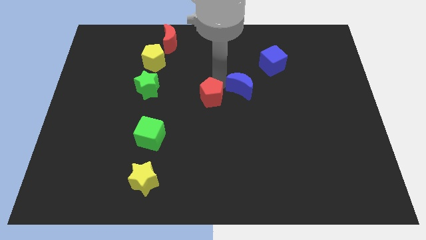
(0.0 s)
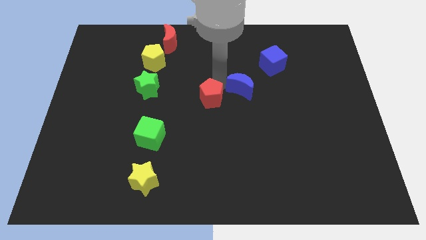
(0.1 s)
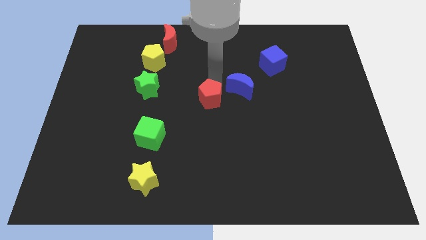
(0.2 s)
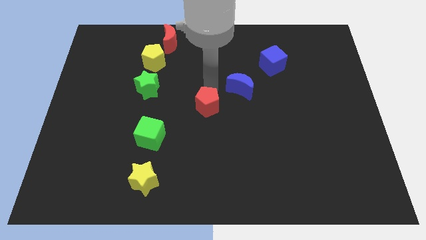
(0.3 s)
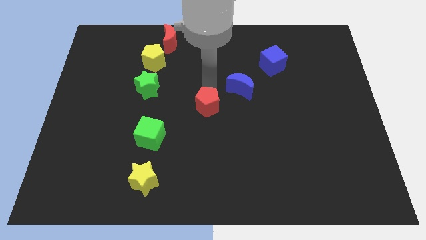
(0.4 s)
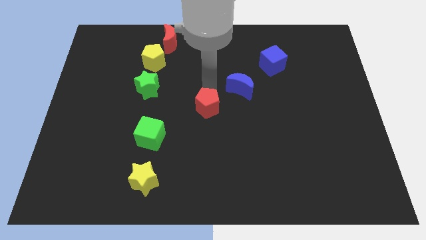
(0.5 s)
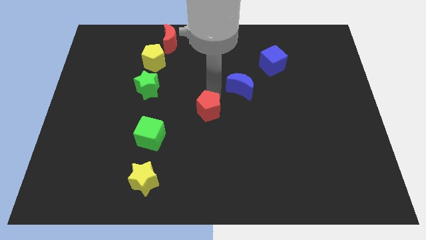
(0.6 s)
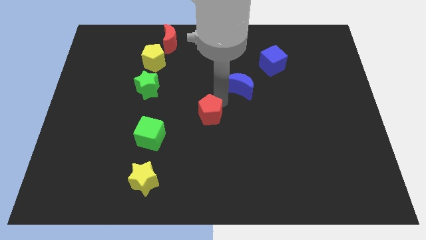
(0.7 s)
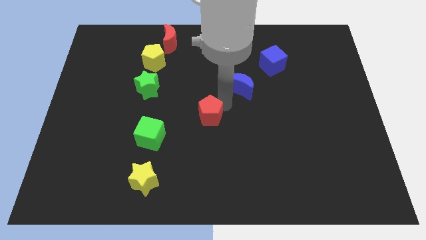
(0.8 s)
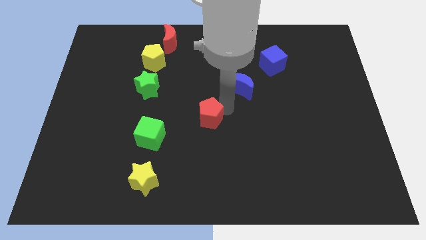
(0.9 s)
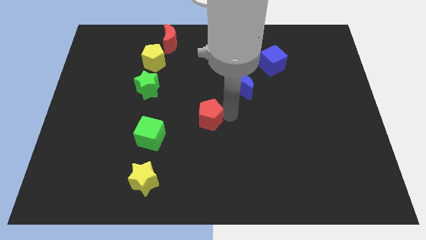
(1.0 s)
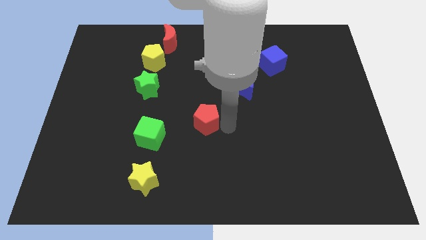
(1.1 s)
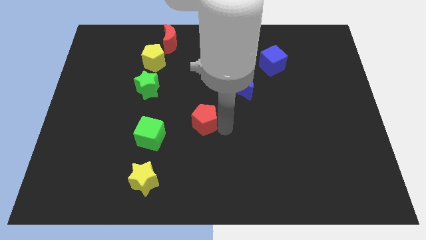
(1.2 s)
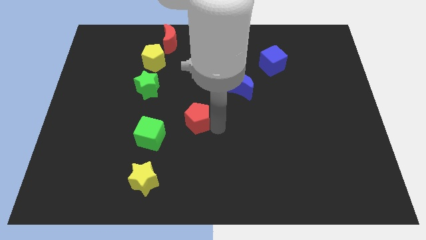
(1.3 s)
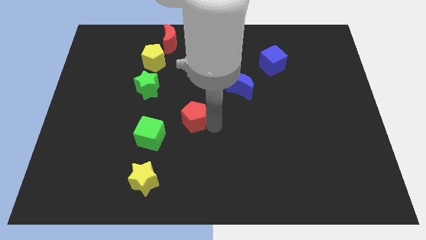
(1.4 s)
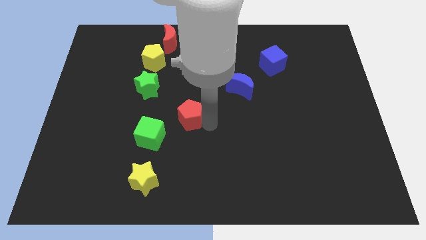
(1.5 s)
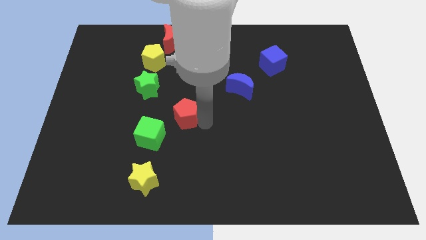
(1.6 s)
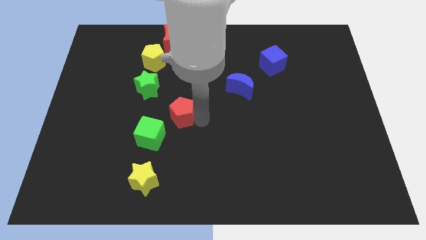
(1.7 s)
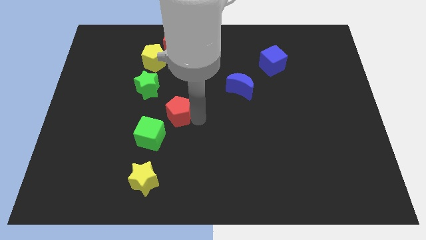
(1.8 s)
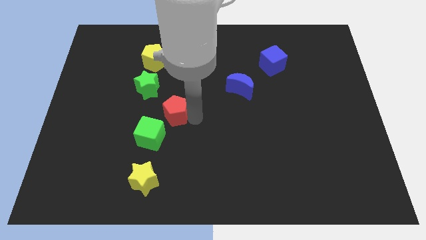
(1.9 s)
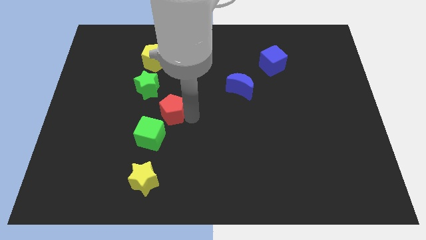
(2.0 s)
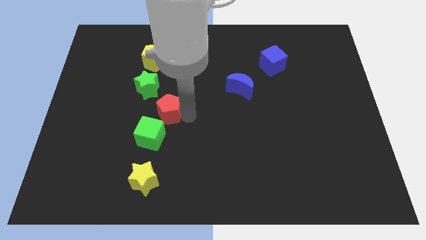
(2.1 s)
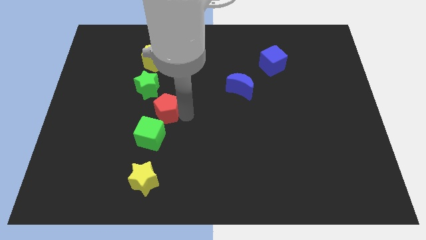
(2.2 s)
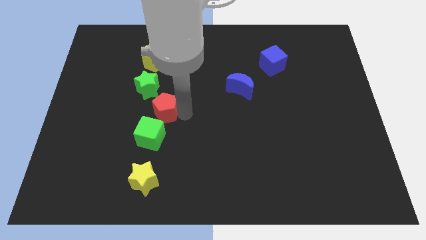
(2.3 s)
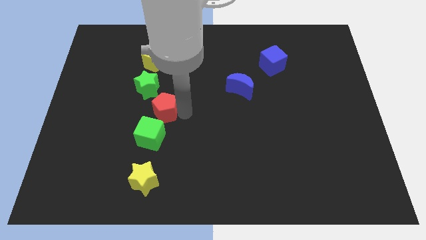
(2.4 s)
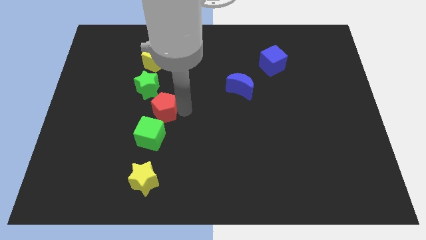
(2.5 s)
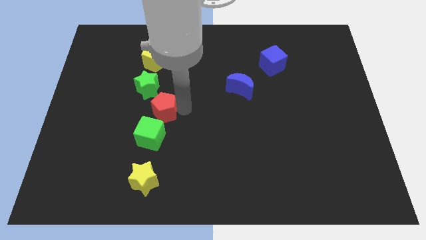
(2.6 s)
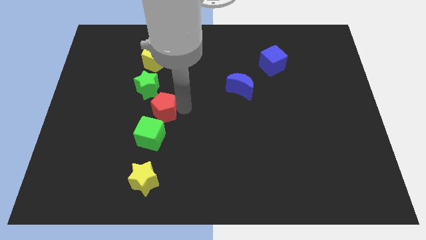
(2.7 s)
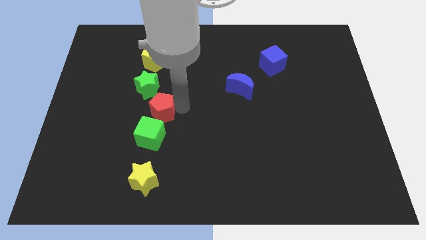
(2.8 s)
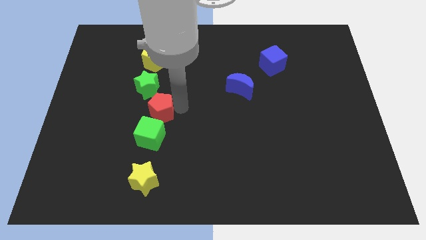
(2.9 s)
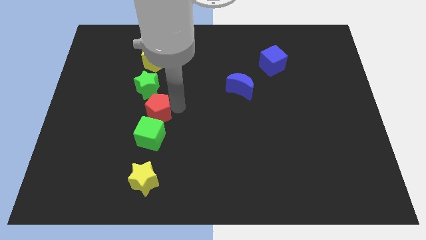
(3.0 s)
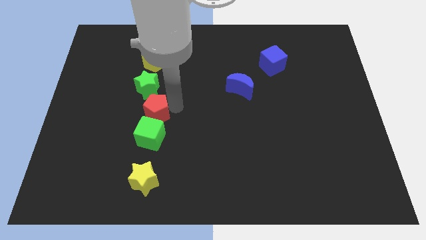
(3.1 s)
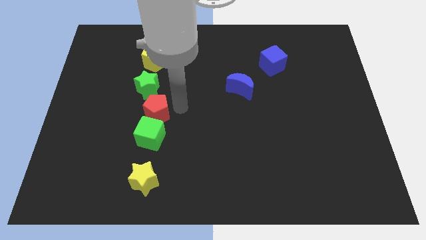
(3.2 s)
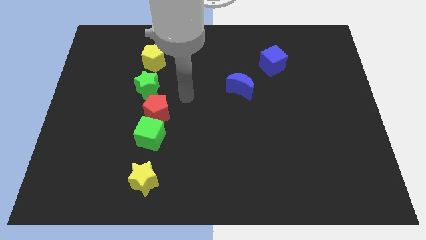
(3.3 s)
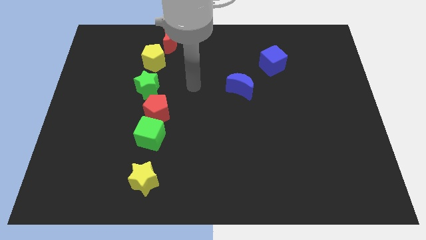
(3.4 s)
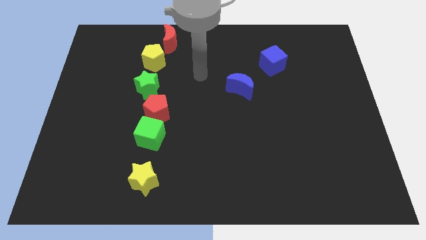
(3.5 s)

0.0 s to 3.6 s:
move the red pentagon to the top of the green cube

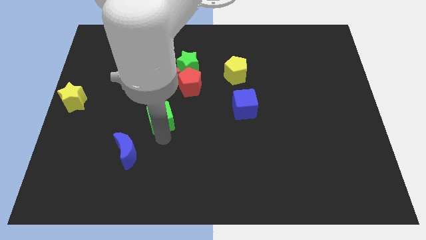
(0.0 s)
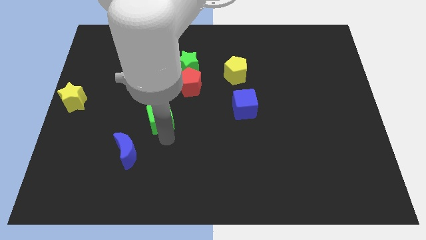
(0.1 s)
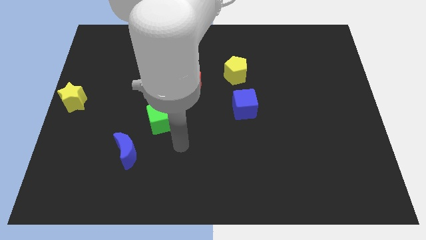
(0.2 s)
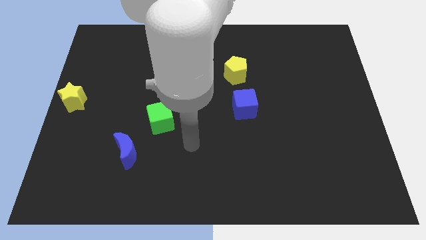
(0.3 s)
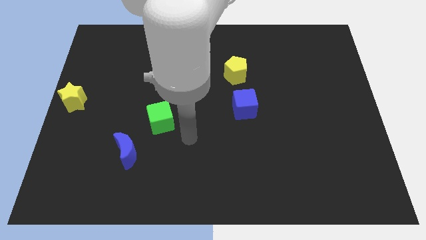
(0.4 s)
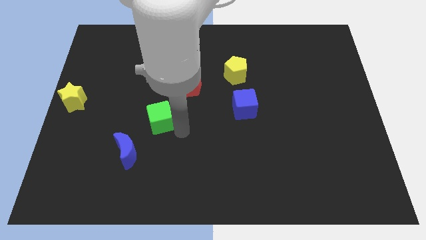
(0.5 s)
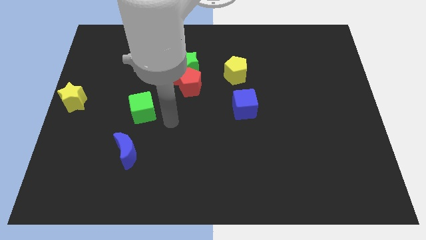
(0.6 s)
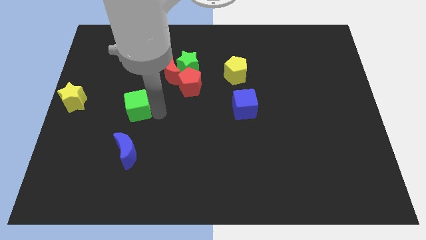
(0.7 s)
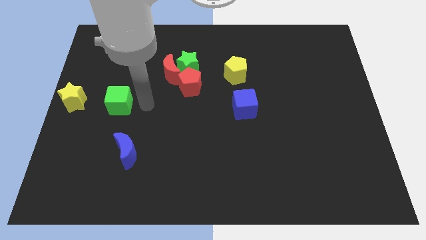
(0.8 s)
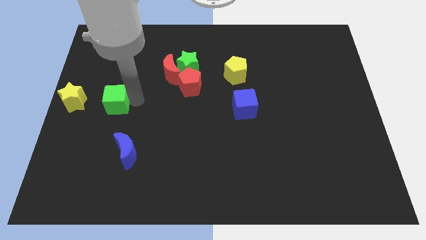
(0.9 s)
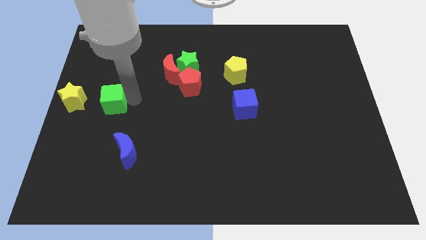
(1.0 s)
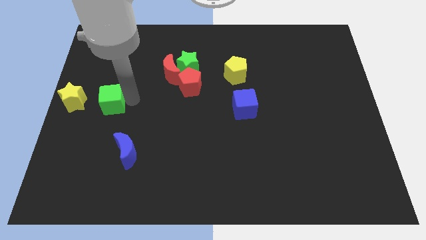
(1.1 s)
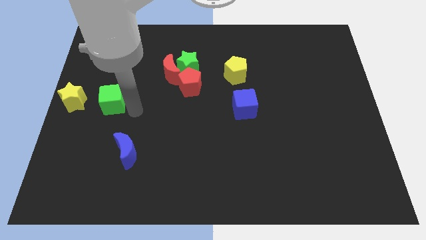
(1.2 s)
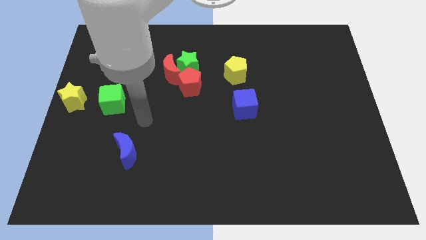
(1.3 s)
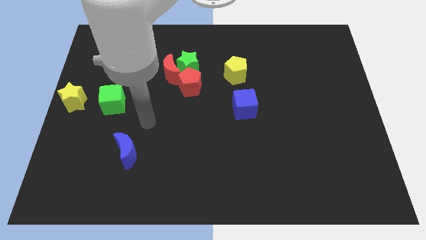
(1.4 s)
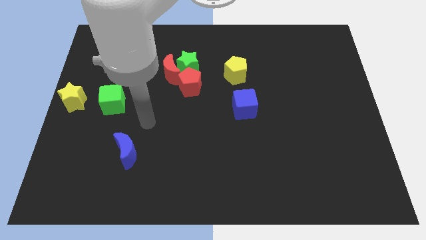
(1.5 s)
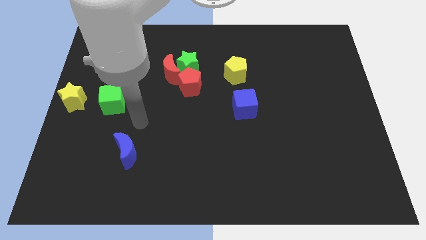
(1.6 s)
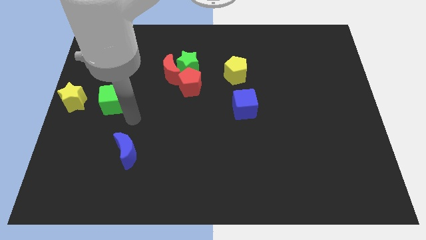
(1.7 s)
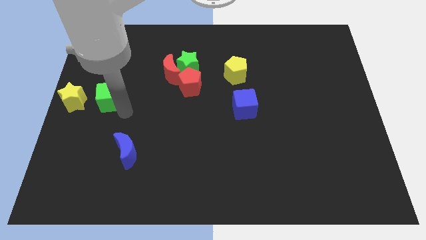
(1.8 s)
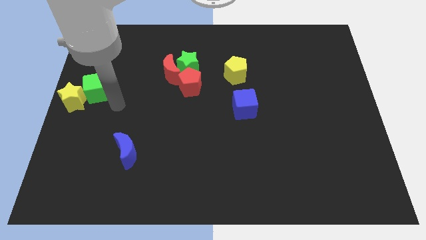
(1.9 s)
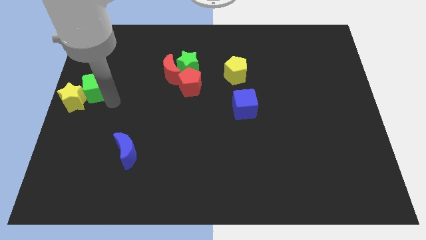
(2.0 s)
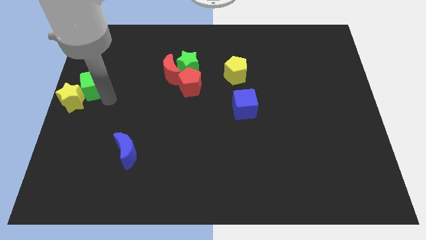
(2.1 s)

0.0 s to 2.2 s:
move the green cube to the right to yellow star

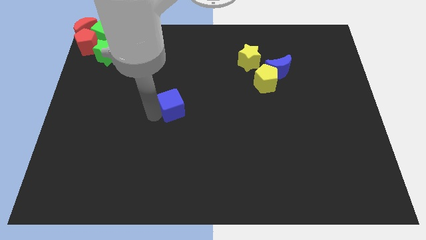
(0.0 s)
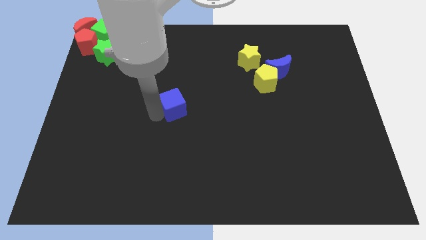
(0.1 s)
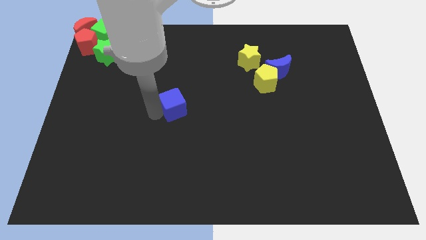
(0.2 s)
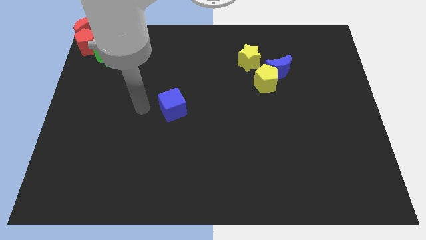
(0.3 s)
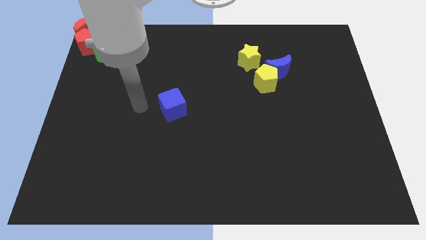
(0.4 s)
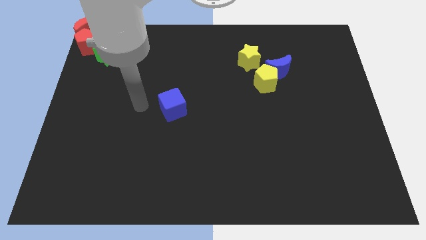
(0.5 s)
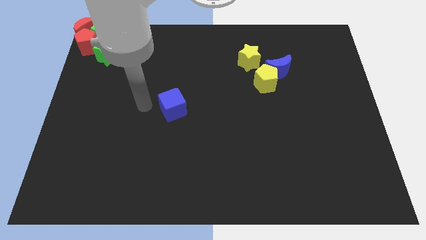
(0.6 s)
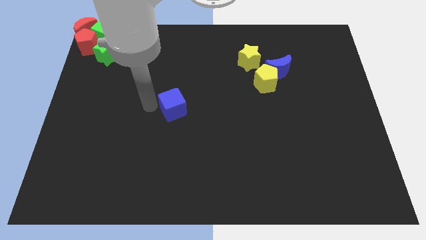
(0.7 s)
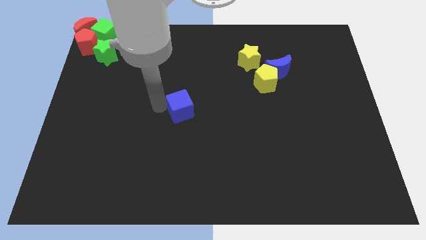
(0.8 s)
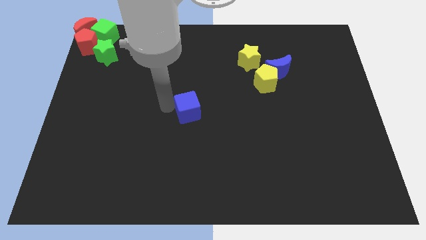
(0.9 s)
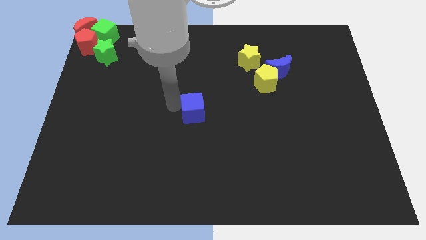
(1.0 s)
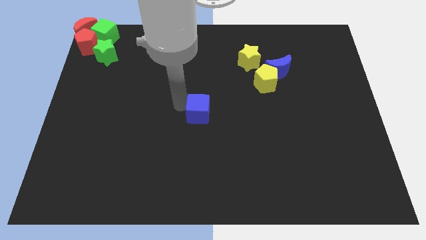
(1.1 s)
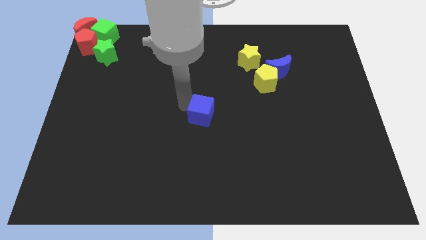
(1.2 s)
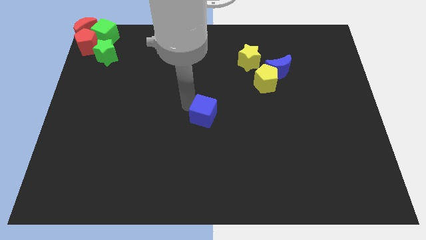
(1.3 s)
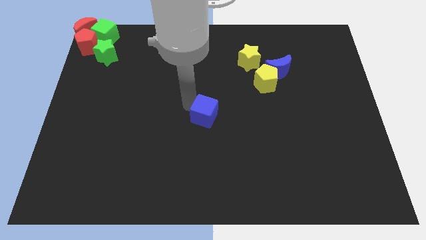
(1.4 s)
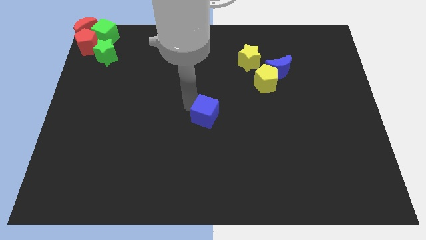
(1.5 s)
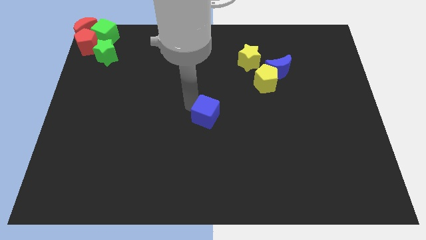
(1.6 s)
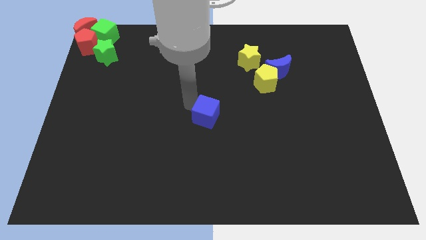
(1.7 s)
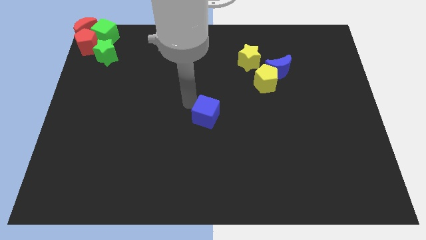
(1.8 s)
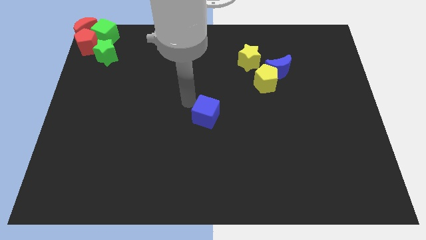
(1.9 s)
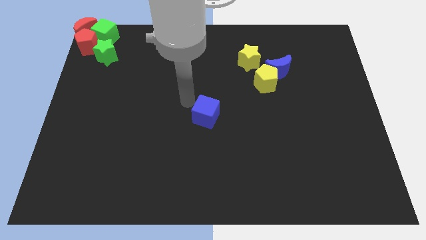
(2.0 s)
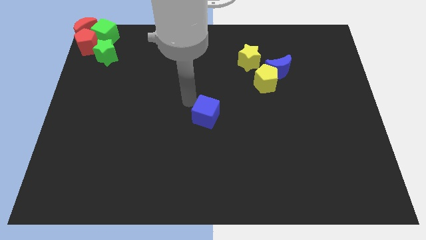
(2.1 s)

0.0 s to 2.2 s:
place the blue cube to the center of the board

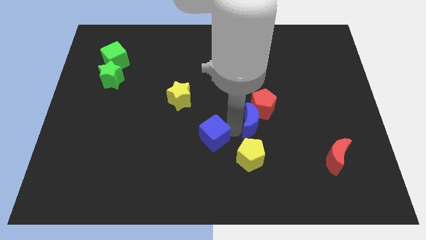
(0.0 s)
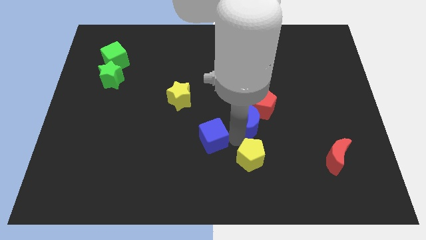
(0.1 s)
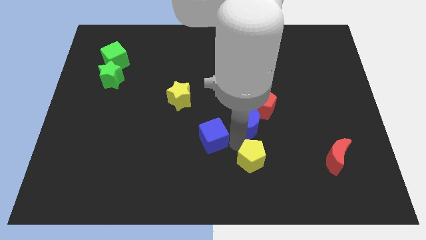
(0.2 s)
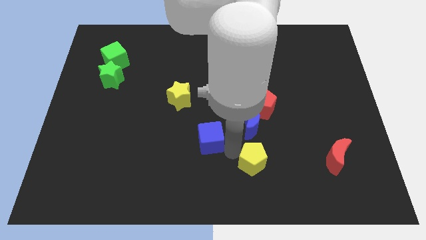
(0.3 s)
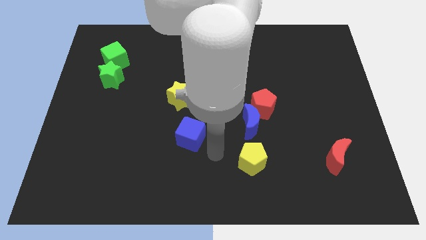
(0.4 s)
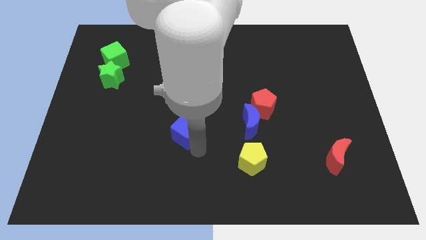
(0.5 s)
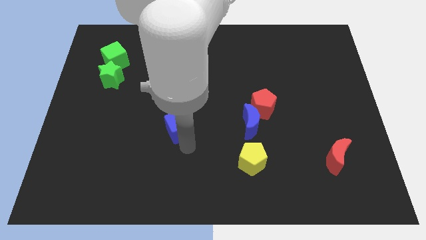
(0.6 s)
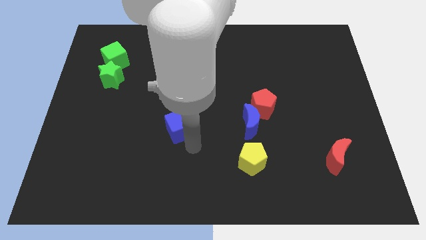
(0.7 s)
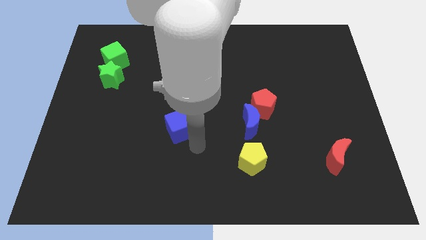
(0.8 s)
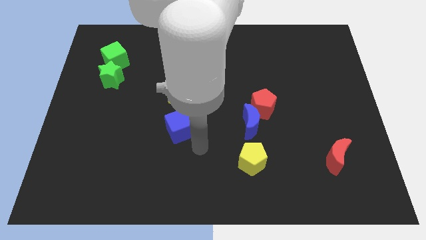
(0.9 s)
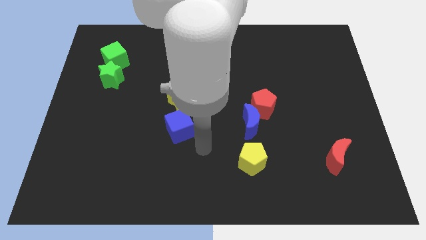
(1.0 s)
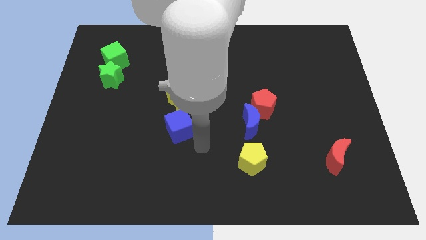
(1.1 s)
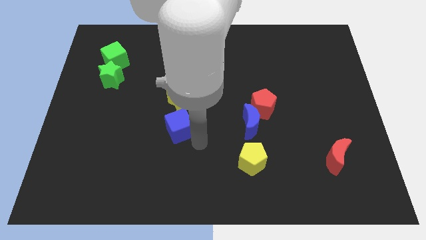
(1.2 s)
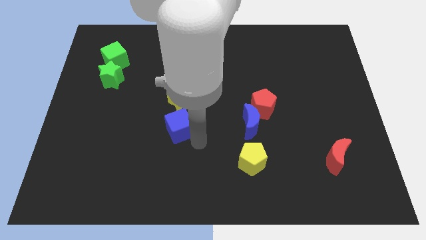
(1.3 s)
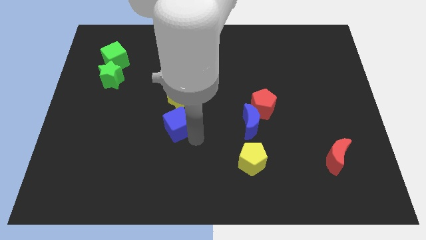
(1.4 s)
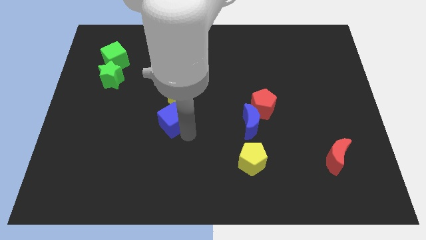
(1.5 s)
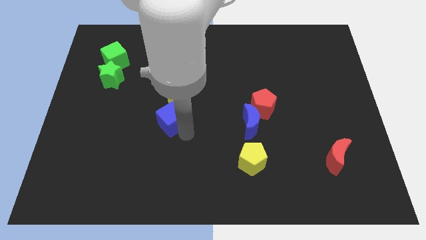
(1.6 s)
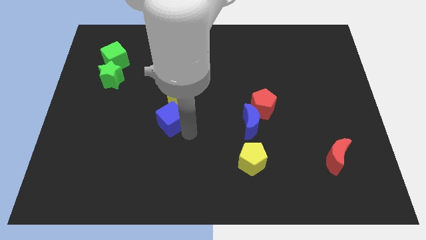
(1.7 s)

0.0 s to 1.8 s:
place the blue cube below the yellow star
